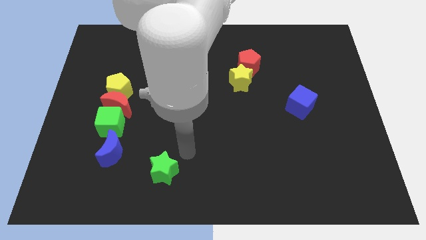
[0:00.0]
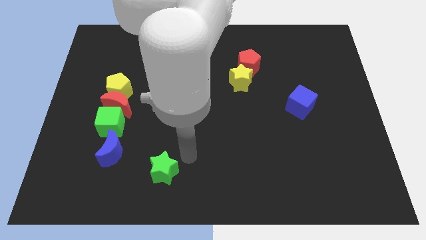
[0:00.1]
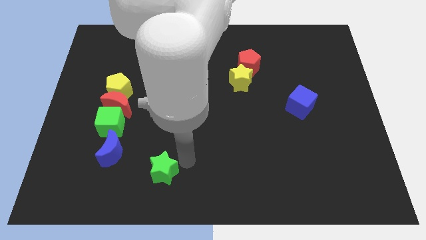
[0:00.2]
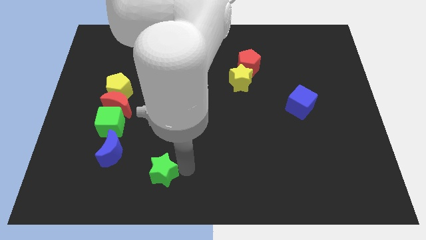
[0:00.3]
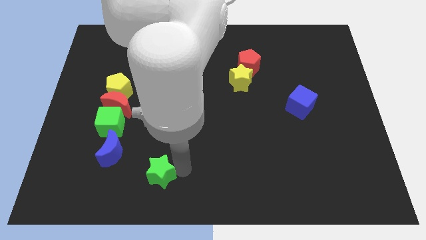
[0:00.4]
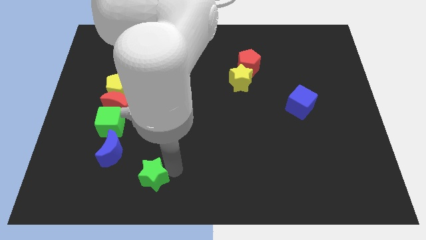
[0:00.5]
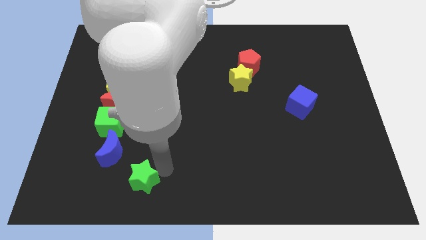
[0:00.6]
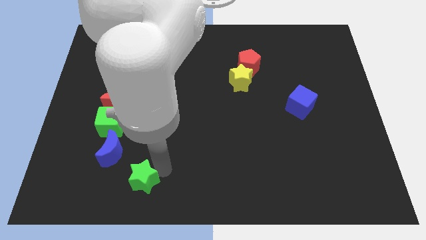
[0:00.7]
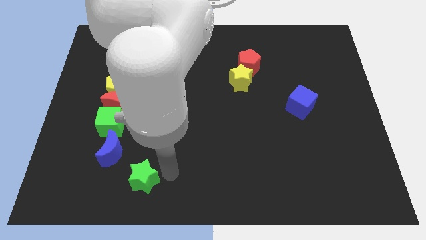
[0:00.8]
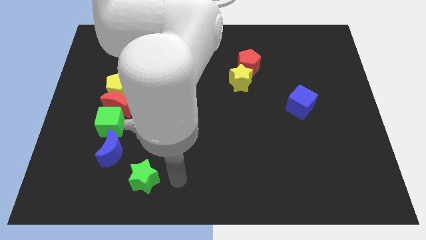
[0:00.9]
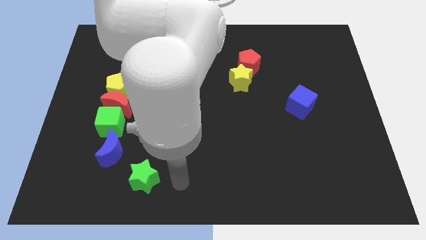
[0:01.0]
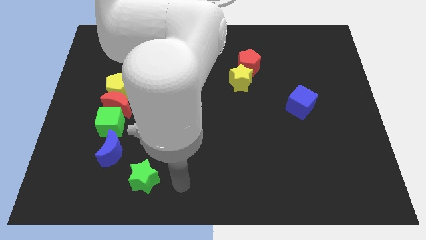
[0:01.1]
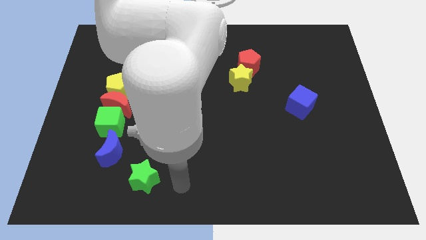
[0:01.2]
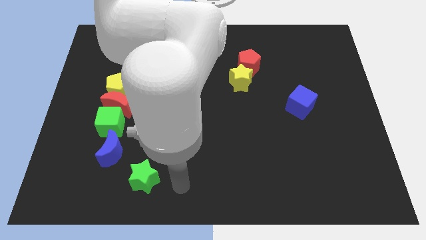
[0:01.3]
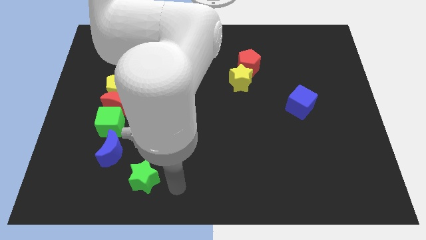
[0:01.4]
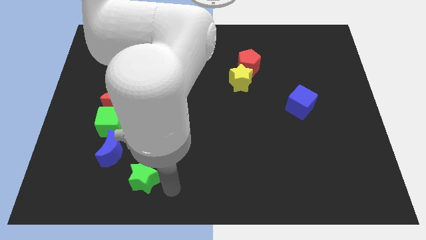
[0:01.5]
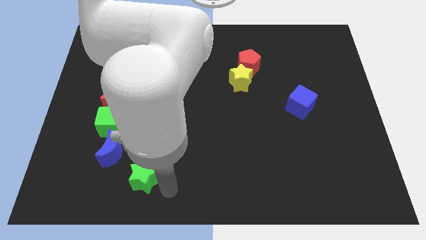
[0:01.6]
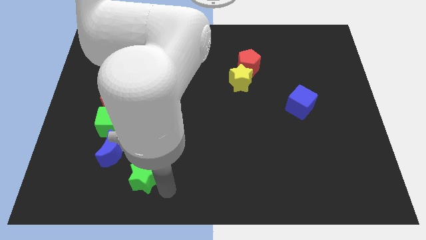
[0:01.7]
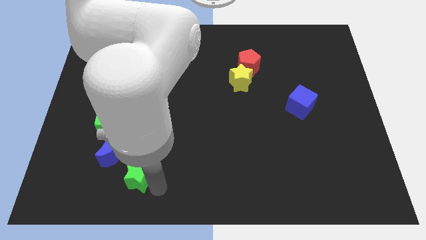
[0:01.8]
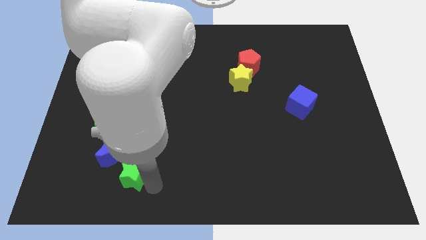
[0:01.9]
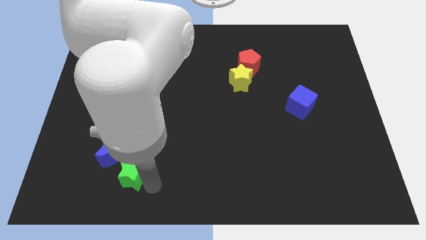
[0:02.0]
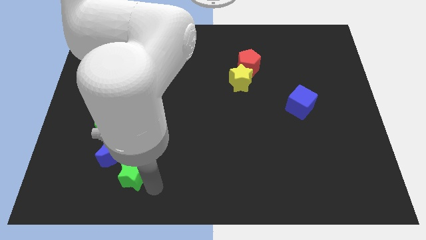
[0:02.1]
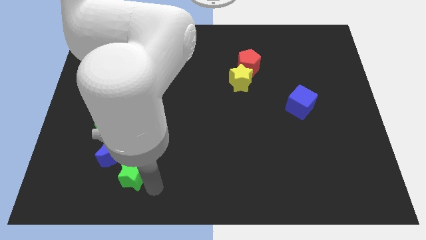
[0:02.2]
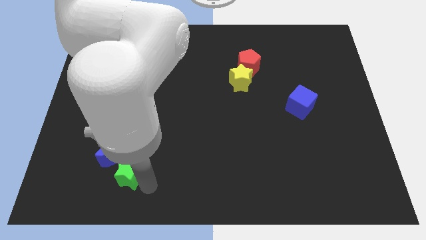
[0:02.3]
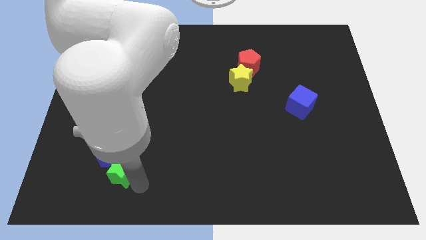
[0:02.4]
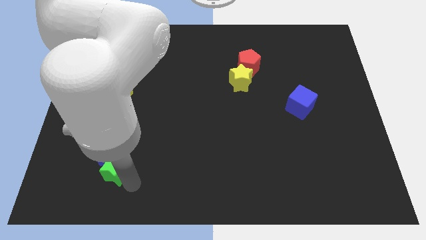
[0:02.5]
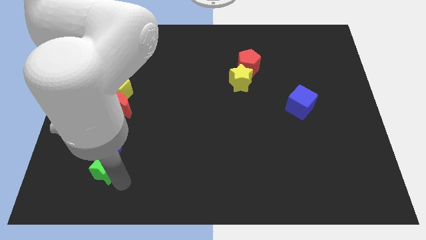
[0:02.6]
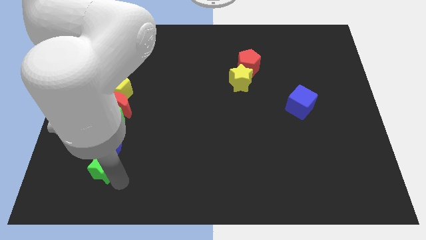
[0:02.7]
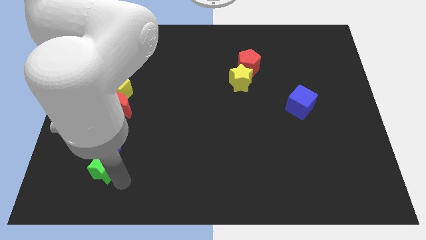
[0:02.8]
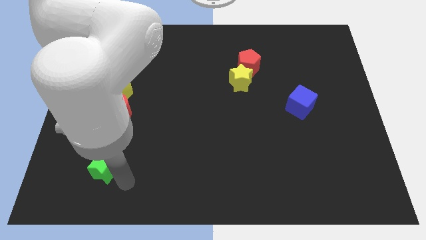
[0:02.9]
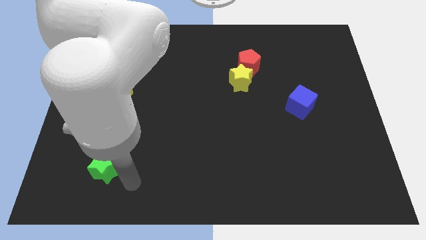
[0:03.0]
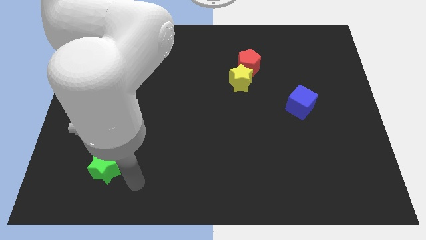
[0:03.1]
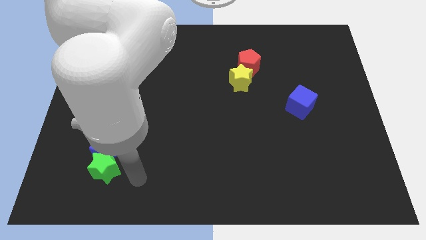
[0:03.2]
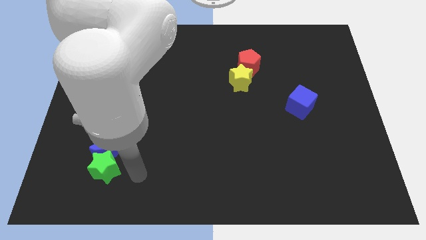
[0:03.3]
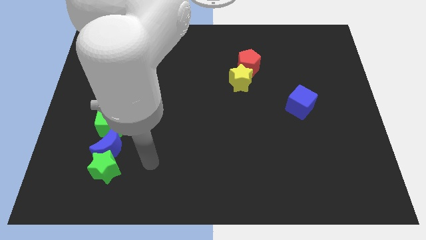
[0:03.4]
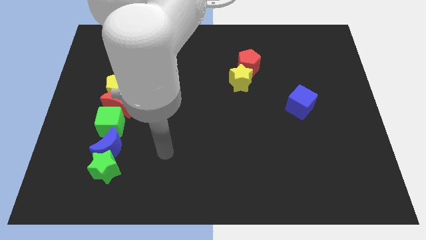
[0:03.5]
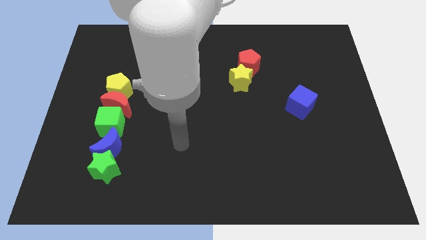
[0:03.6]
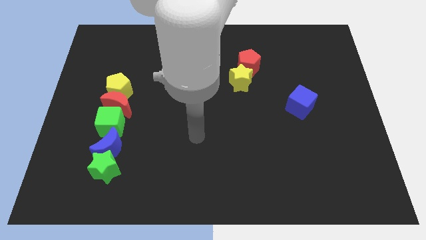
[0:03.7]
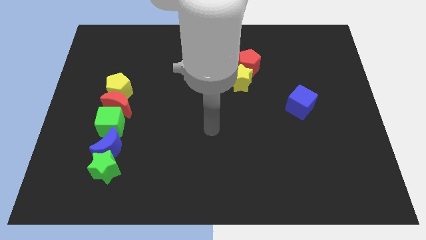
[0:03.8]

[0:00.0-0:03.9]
place green star below blue moon

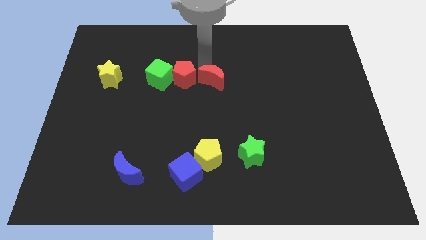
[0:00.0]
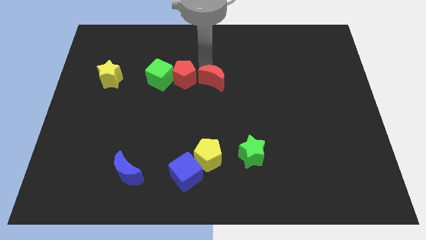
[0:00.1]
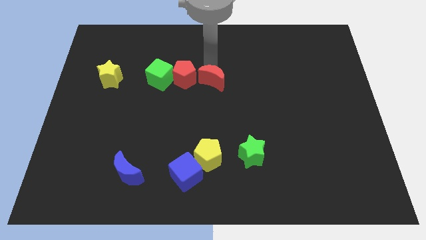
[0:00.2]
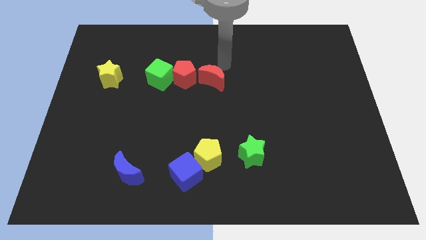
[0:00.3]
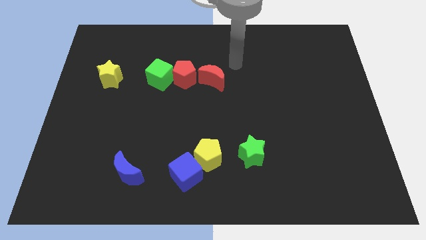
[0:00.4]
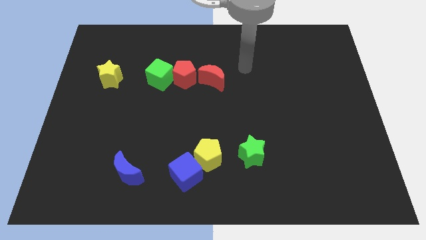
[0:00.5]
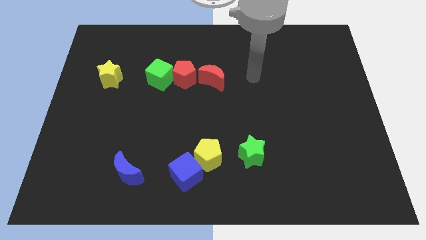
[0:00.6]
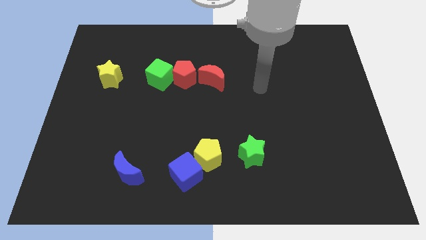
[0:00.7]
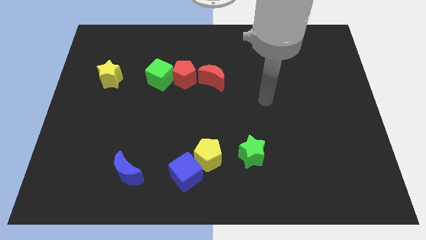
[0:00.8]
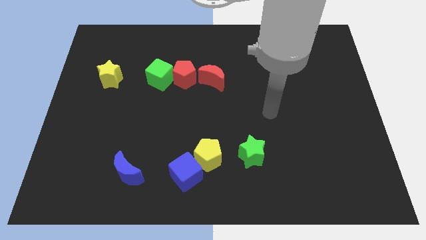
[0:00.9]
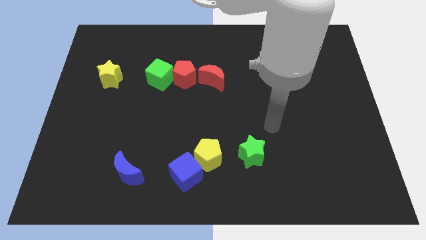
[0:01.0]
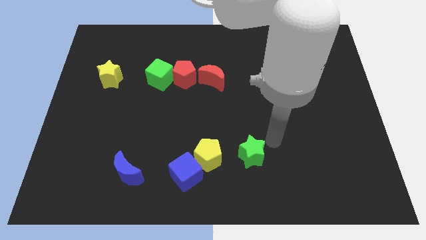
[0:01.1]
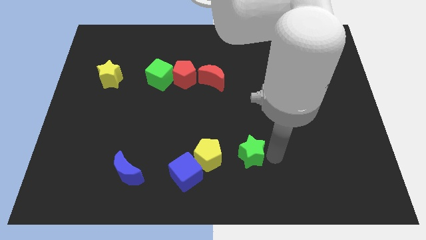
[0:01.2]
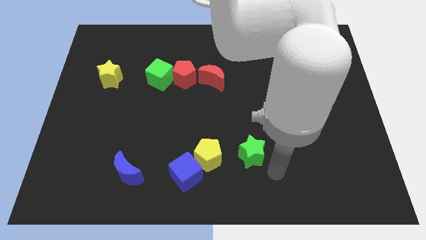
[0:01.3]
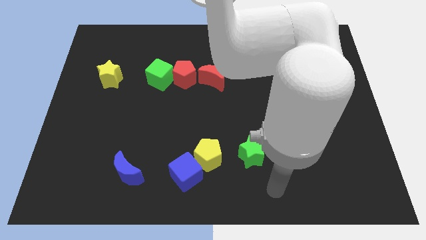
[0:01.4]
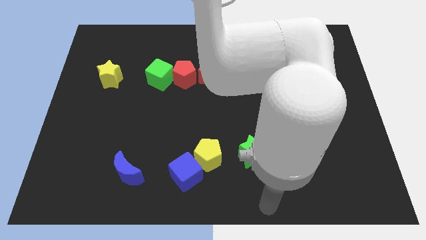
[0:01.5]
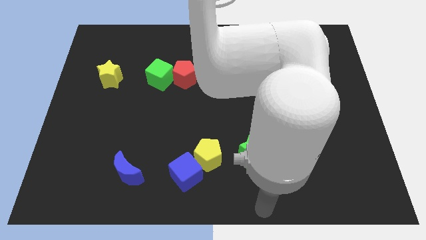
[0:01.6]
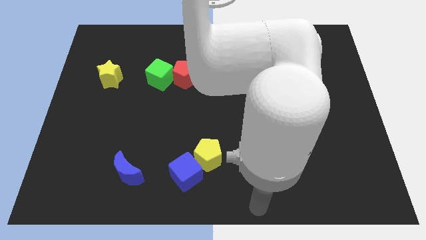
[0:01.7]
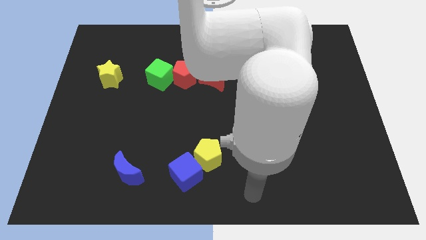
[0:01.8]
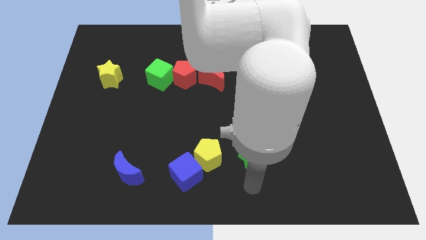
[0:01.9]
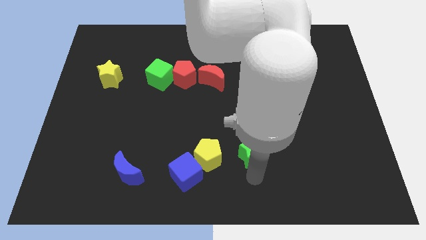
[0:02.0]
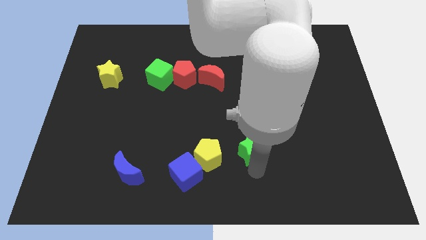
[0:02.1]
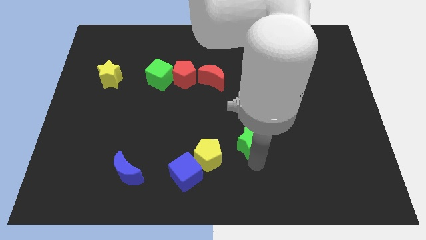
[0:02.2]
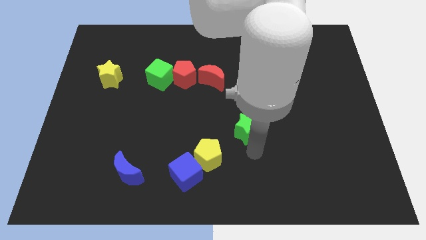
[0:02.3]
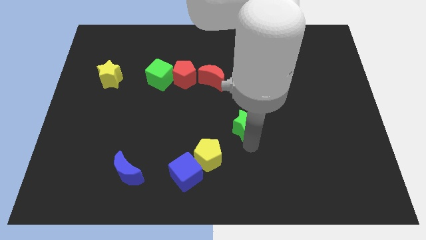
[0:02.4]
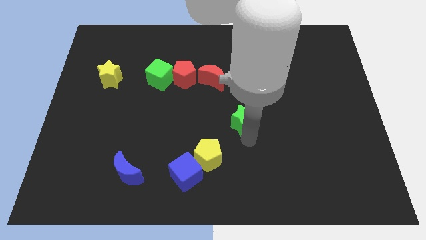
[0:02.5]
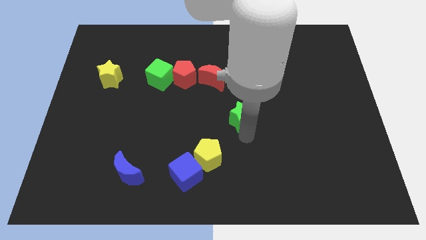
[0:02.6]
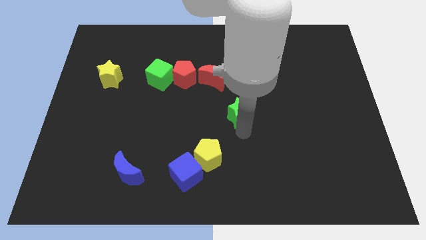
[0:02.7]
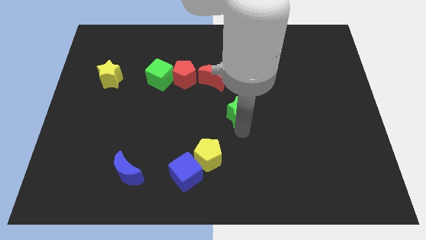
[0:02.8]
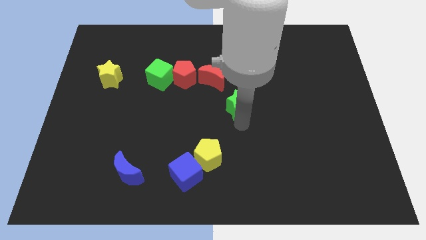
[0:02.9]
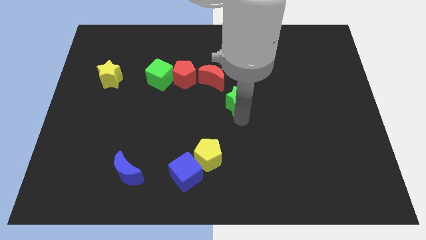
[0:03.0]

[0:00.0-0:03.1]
push the green star towards the red moon

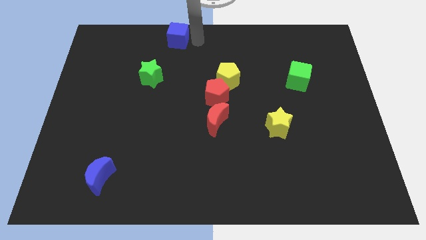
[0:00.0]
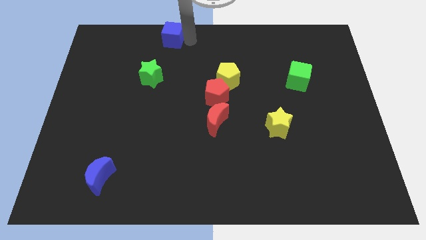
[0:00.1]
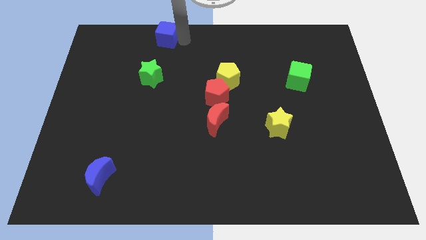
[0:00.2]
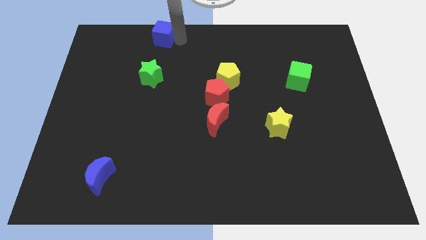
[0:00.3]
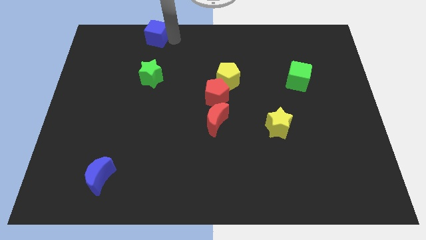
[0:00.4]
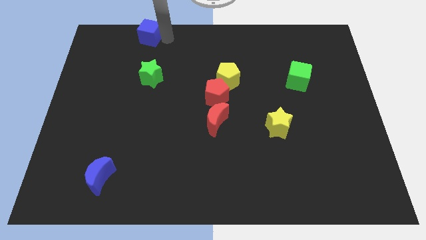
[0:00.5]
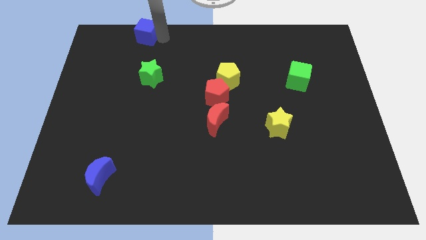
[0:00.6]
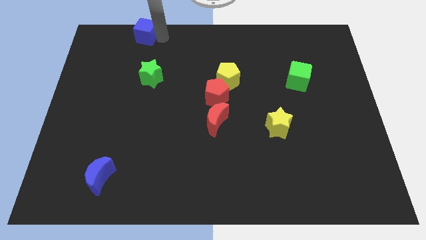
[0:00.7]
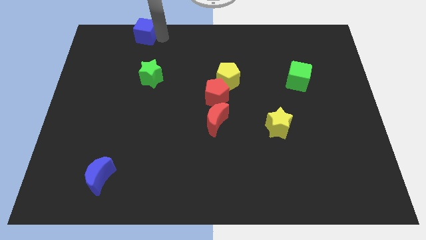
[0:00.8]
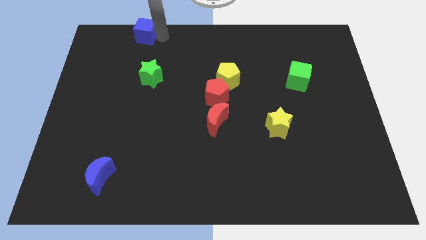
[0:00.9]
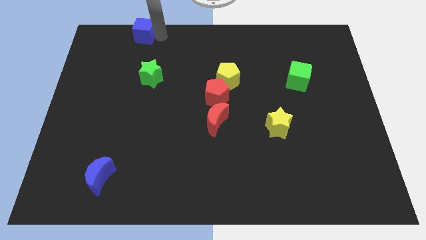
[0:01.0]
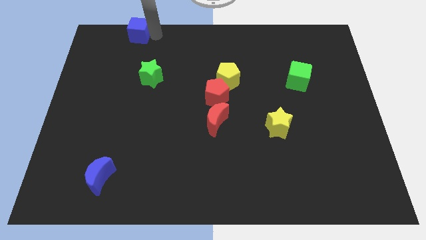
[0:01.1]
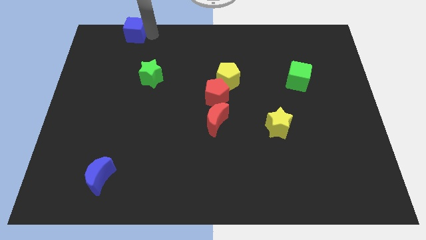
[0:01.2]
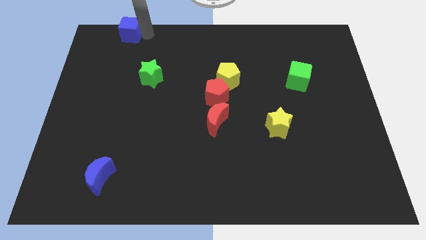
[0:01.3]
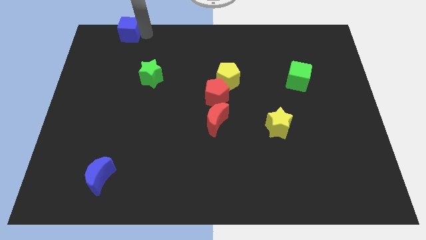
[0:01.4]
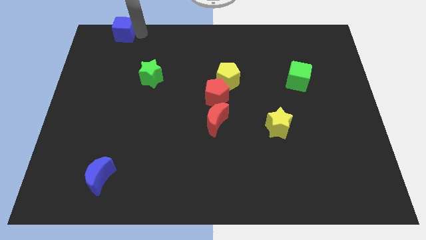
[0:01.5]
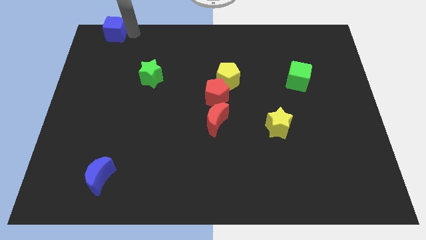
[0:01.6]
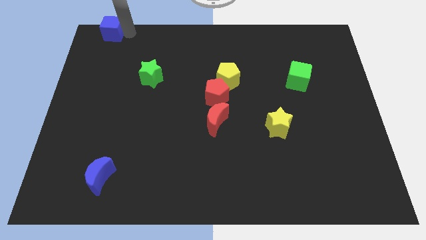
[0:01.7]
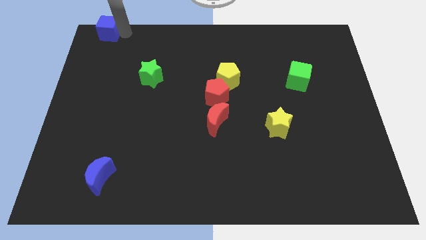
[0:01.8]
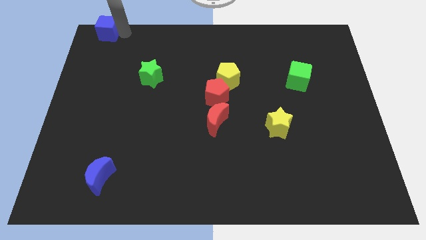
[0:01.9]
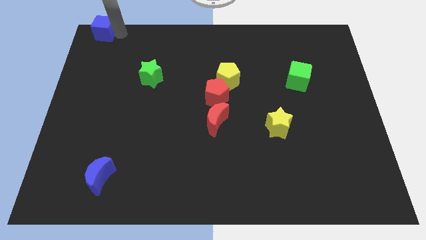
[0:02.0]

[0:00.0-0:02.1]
push the blue cube towards the top left corner of the board
